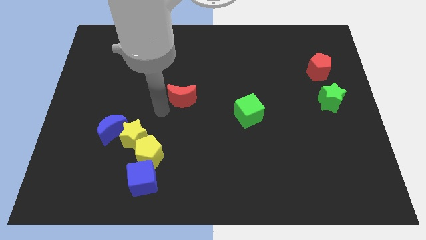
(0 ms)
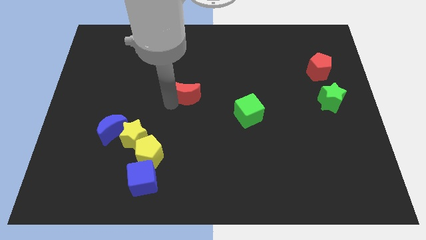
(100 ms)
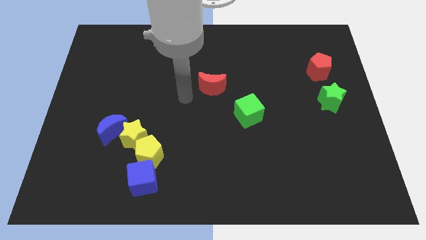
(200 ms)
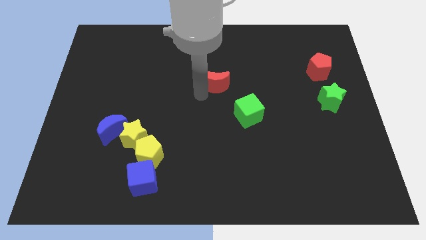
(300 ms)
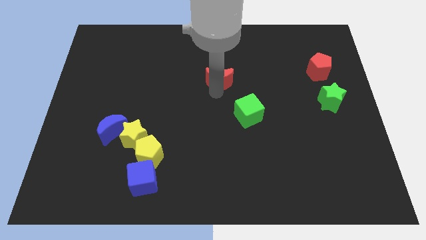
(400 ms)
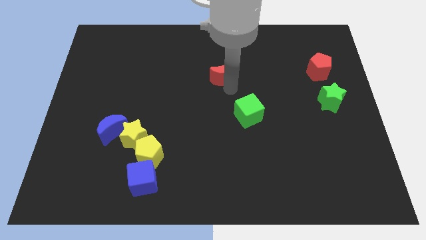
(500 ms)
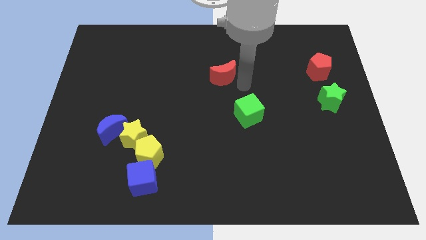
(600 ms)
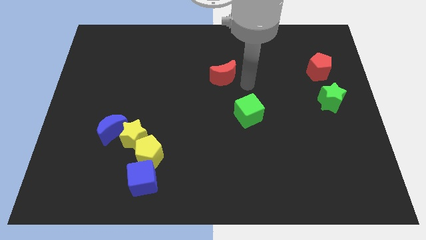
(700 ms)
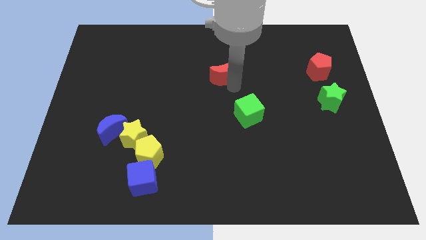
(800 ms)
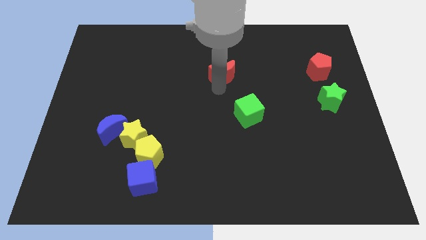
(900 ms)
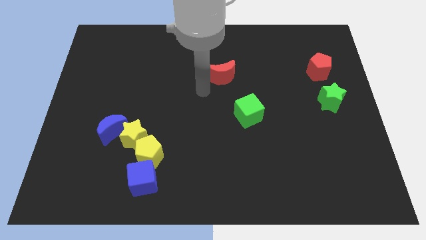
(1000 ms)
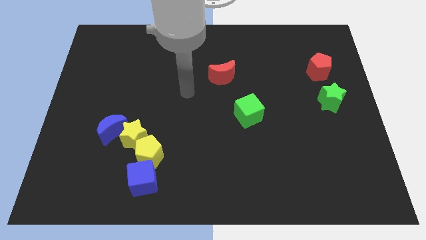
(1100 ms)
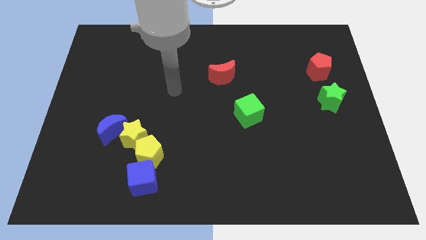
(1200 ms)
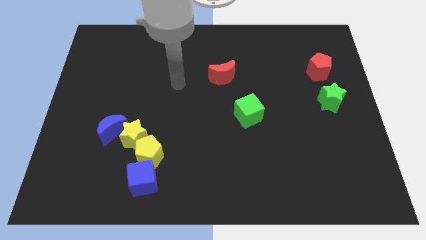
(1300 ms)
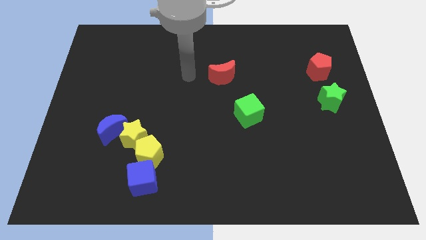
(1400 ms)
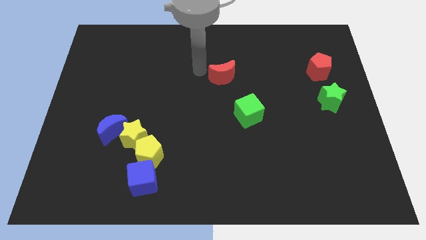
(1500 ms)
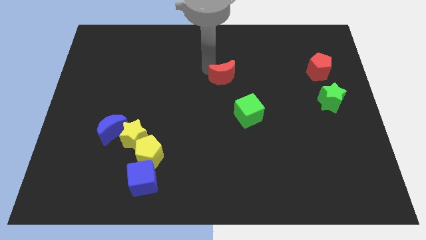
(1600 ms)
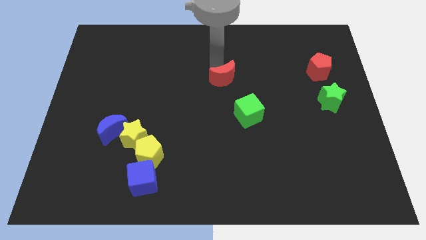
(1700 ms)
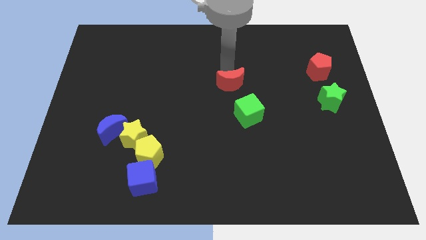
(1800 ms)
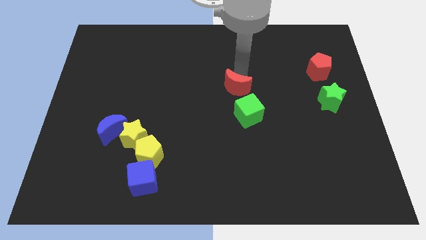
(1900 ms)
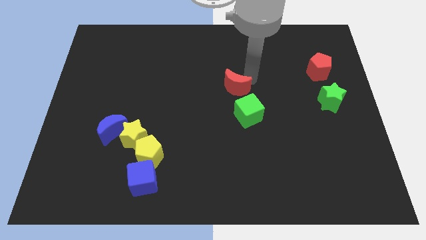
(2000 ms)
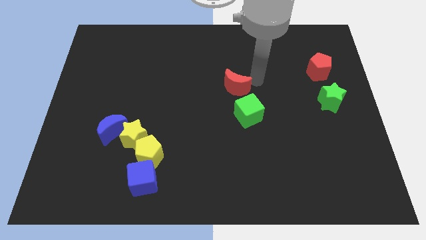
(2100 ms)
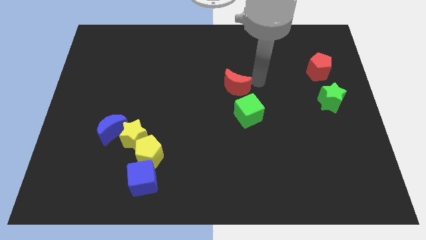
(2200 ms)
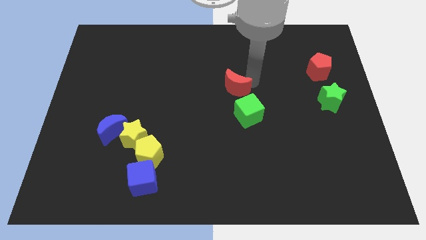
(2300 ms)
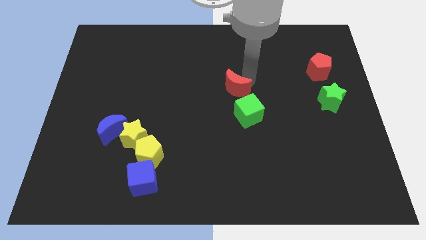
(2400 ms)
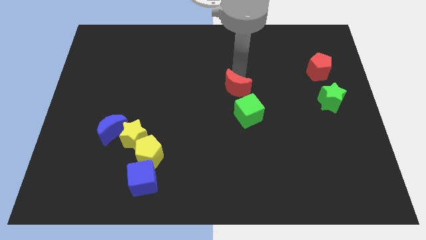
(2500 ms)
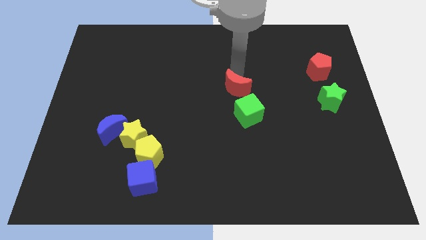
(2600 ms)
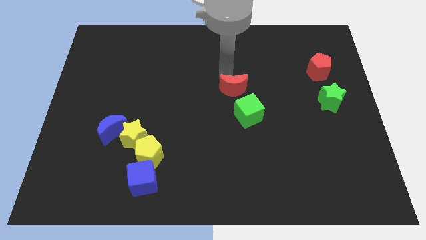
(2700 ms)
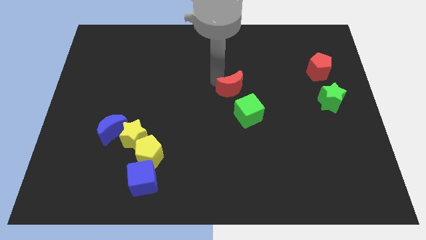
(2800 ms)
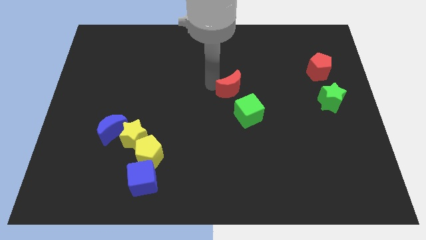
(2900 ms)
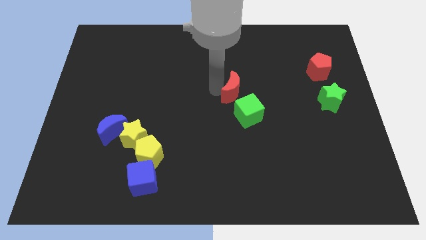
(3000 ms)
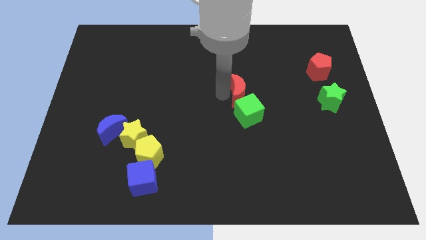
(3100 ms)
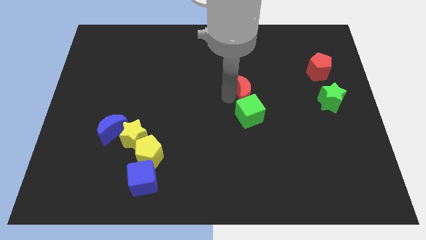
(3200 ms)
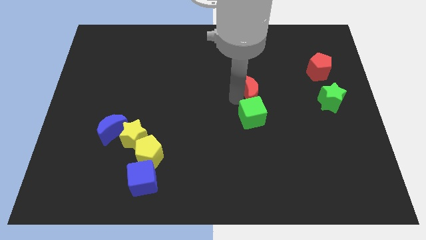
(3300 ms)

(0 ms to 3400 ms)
make the red crescent to touch the green cube

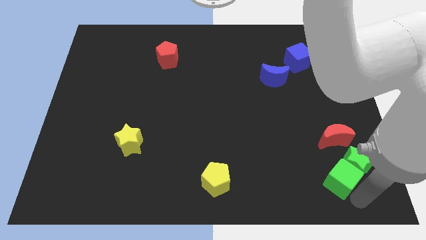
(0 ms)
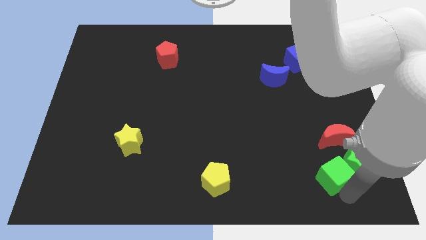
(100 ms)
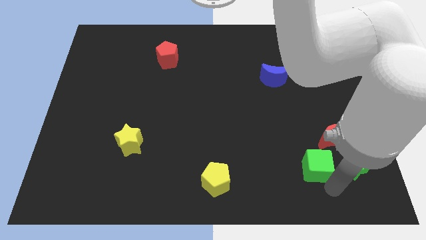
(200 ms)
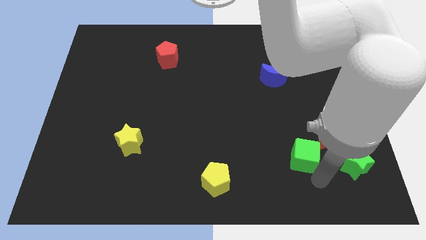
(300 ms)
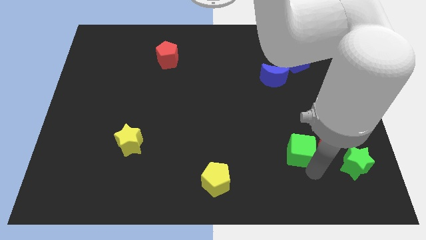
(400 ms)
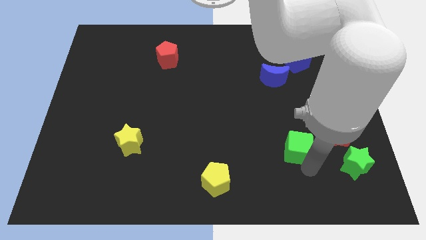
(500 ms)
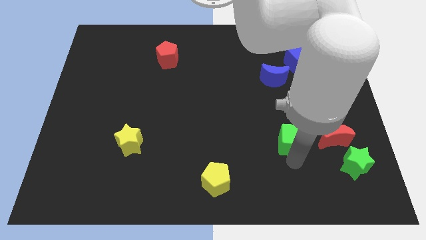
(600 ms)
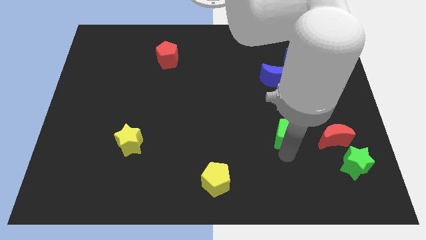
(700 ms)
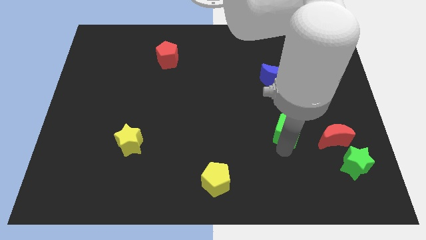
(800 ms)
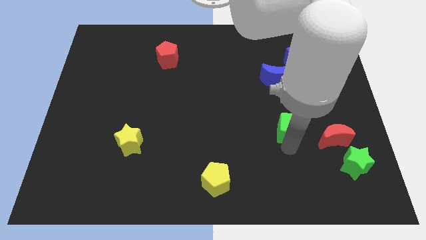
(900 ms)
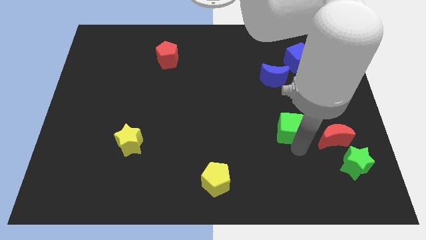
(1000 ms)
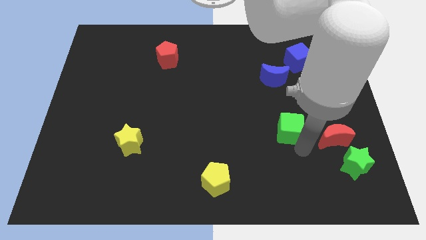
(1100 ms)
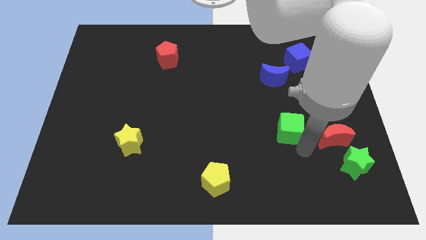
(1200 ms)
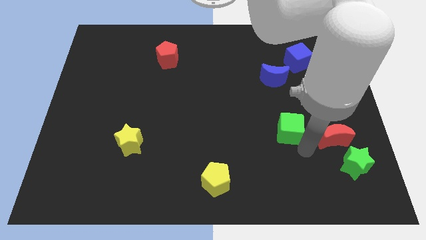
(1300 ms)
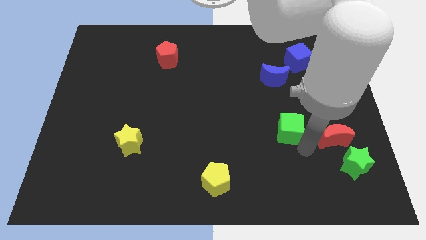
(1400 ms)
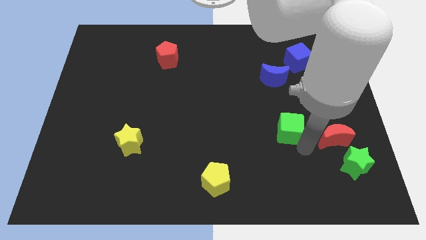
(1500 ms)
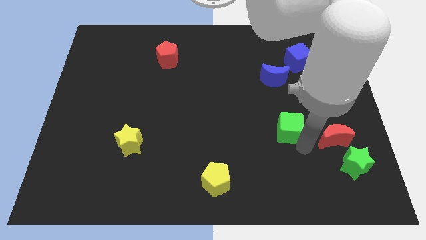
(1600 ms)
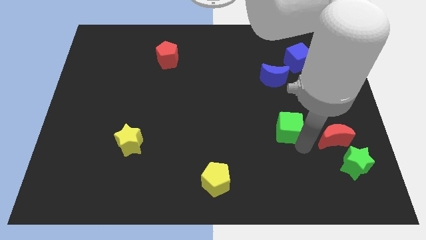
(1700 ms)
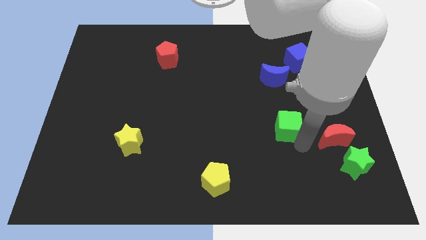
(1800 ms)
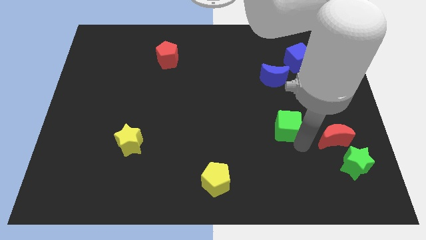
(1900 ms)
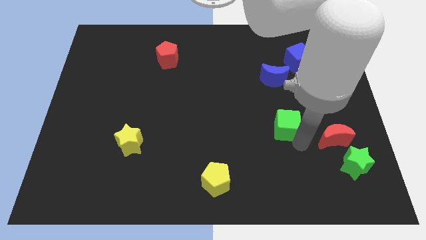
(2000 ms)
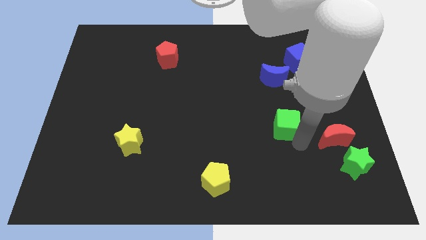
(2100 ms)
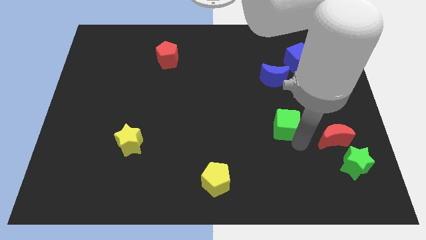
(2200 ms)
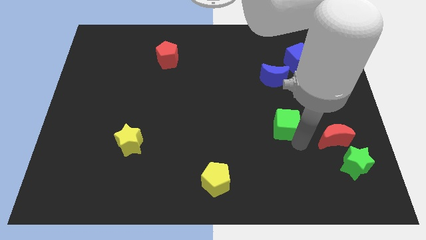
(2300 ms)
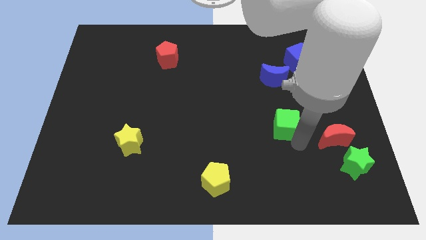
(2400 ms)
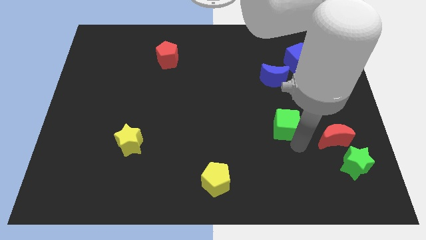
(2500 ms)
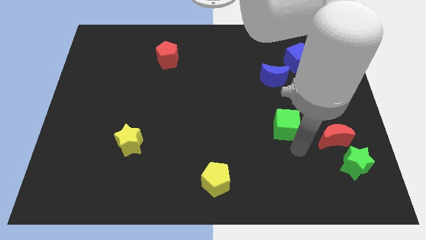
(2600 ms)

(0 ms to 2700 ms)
drag the green cube slightly up side of the board

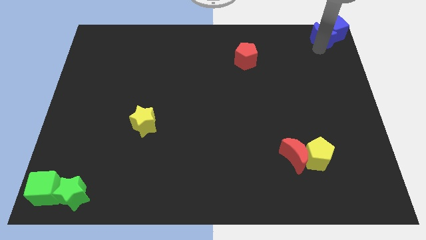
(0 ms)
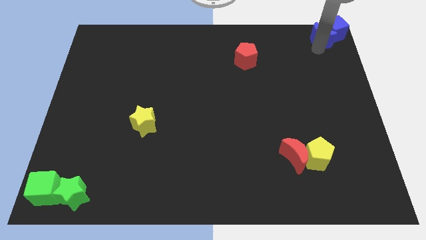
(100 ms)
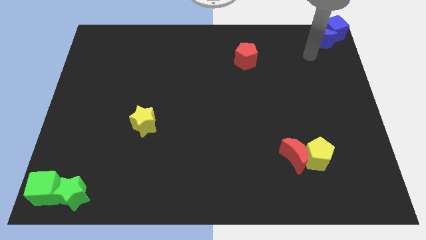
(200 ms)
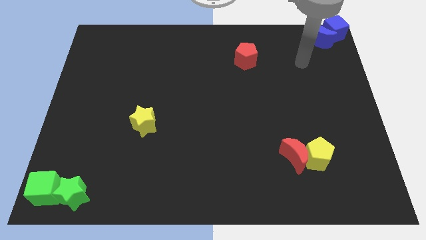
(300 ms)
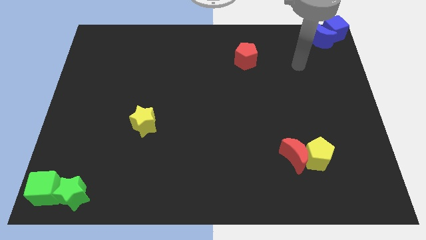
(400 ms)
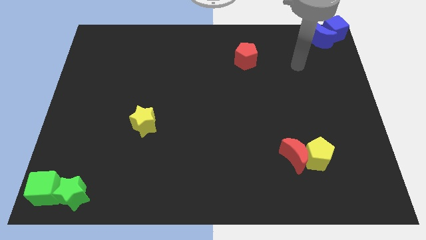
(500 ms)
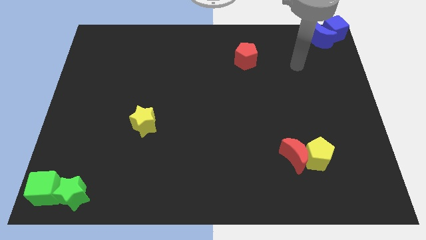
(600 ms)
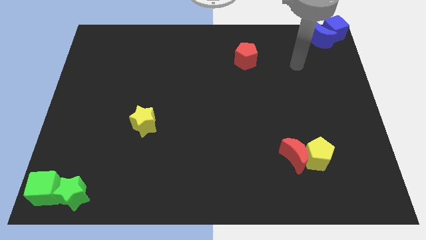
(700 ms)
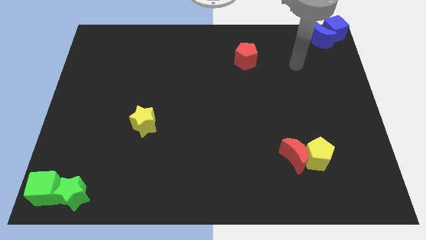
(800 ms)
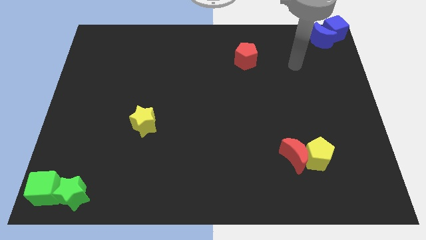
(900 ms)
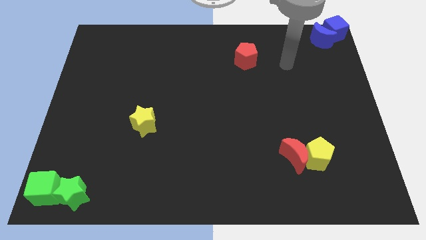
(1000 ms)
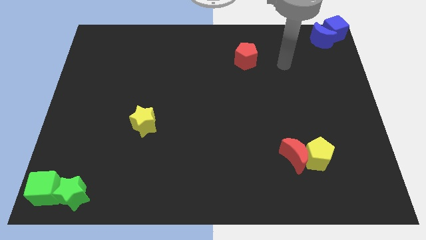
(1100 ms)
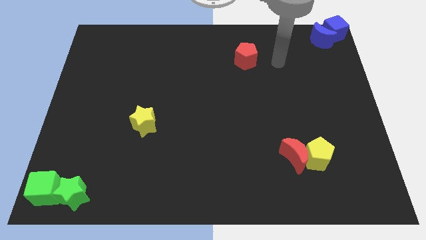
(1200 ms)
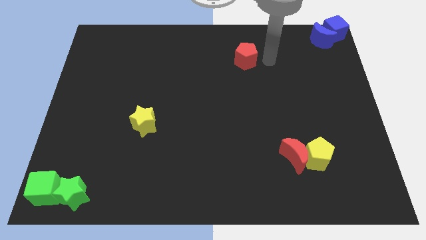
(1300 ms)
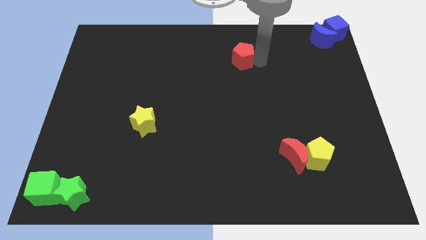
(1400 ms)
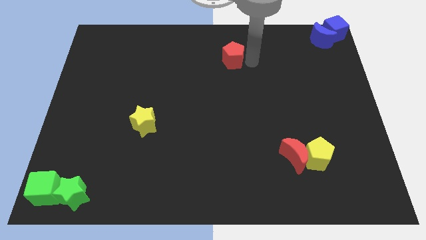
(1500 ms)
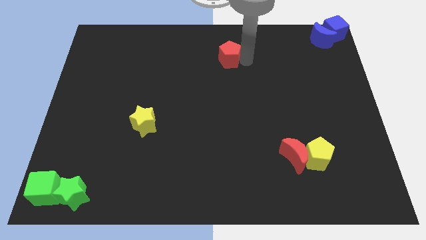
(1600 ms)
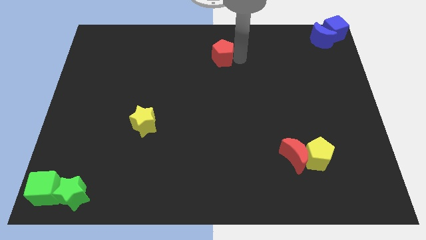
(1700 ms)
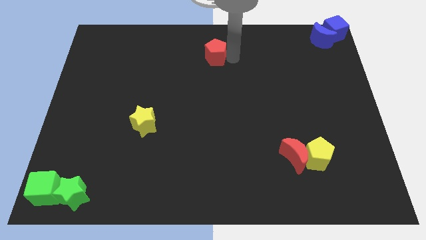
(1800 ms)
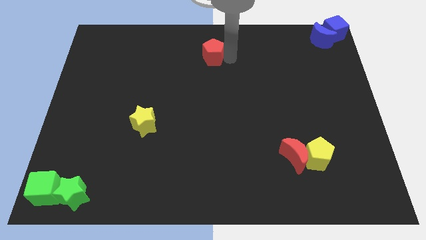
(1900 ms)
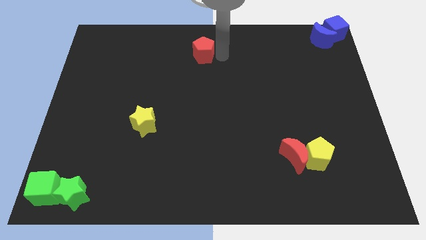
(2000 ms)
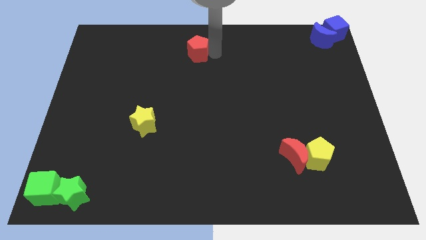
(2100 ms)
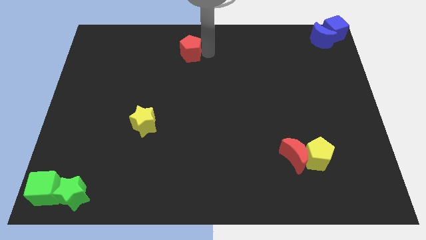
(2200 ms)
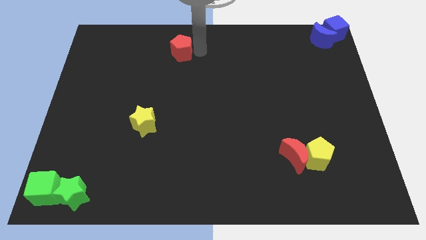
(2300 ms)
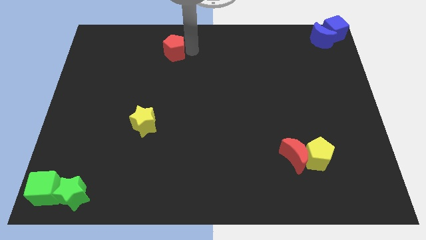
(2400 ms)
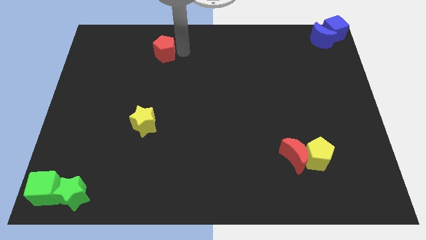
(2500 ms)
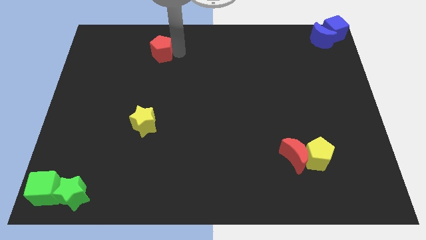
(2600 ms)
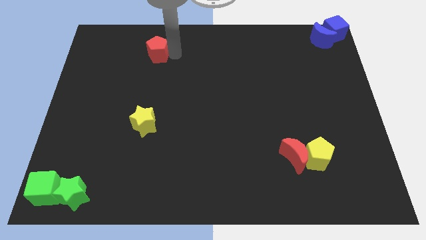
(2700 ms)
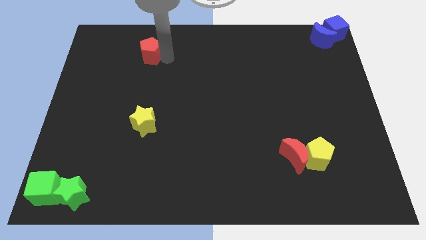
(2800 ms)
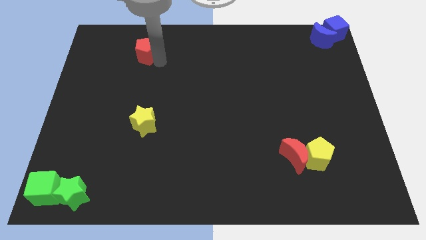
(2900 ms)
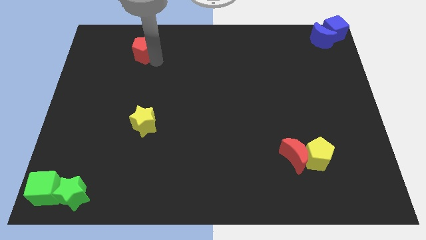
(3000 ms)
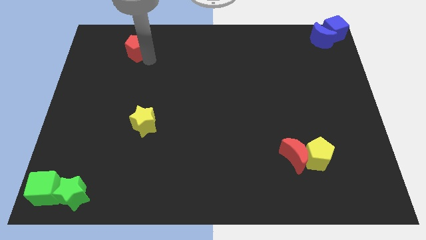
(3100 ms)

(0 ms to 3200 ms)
put the red pentagon vertically above the yellow star
